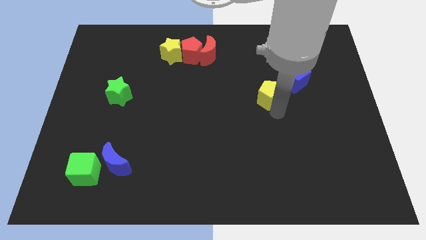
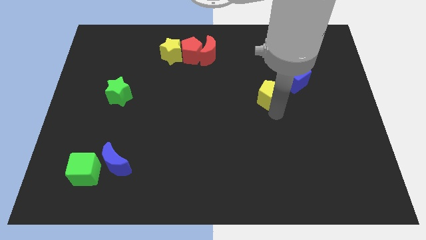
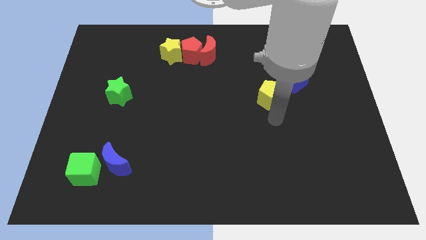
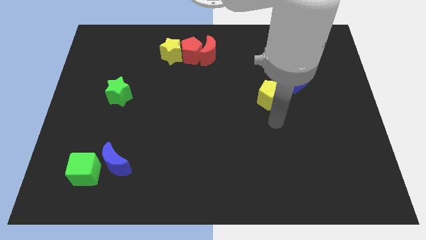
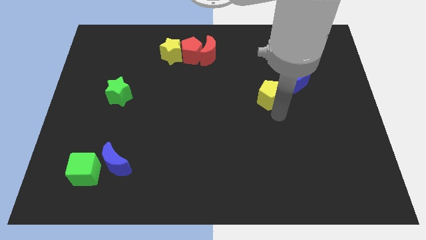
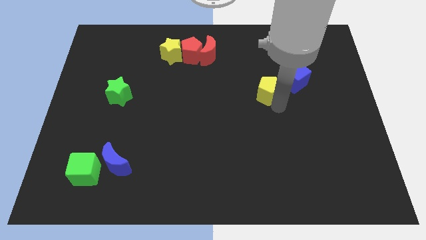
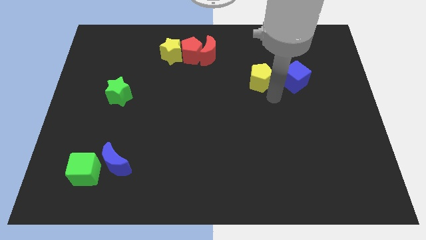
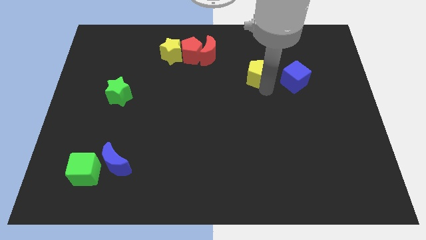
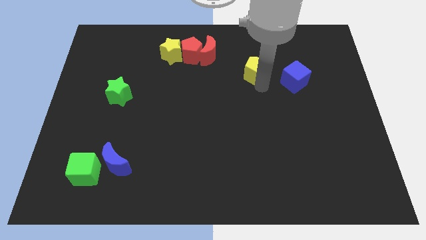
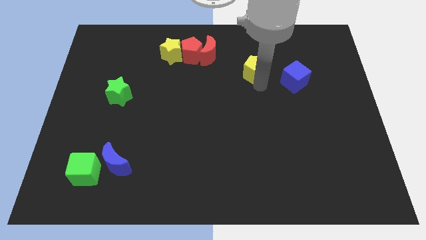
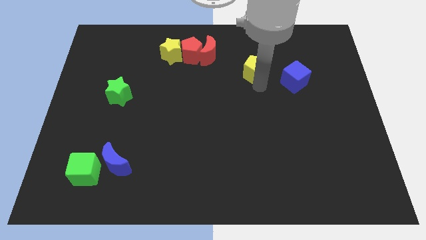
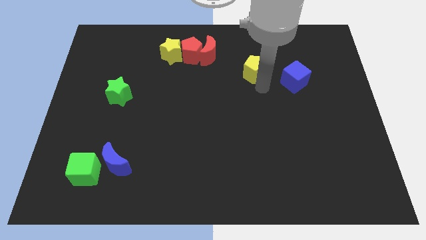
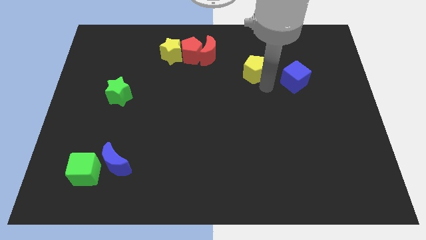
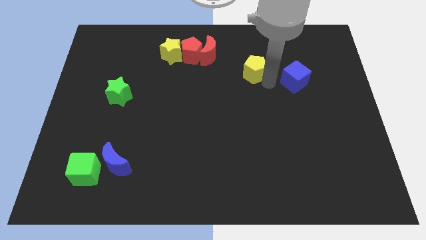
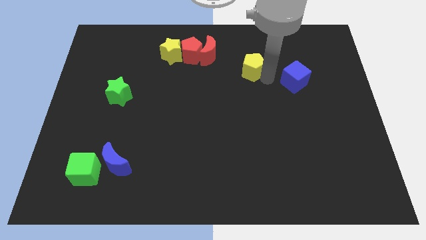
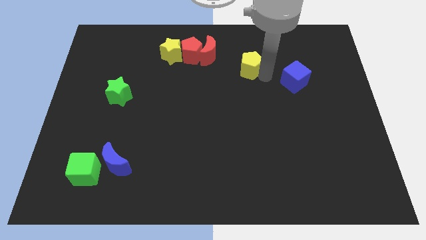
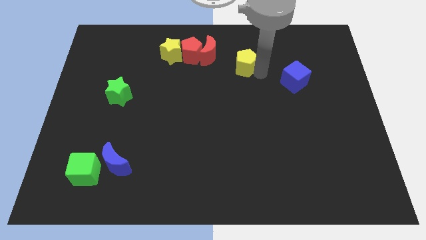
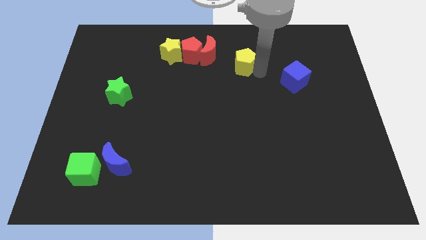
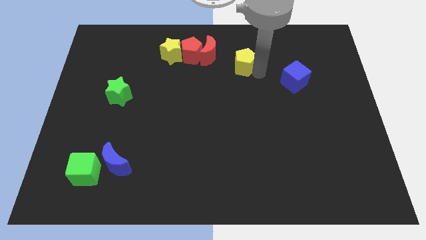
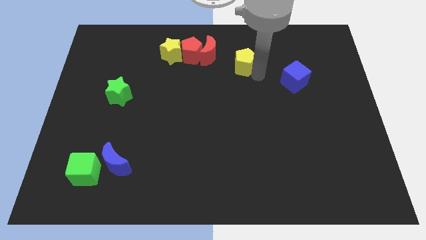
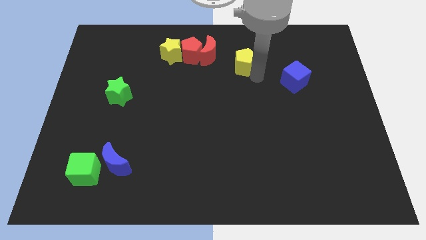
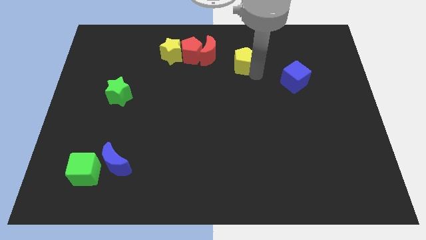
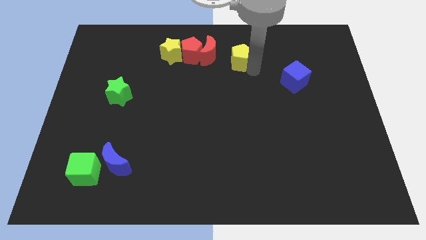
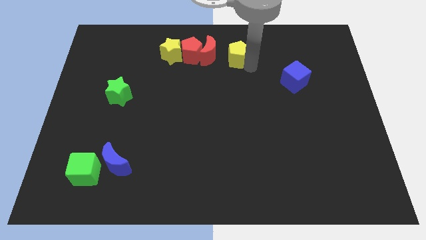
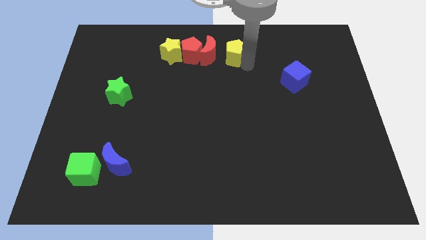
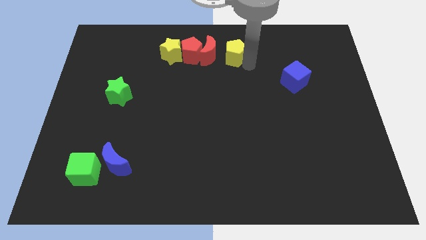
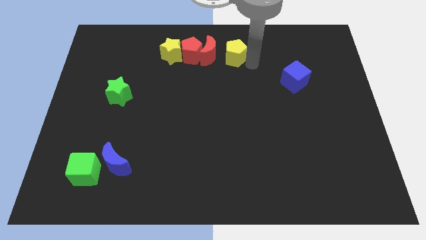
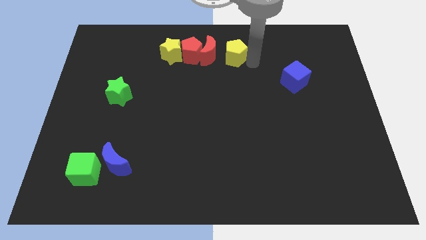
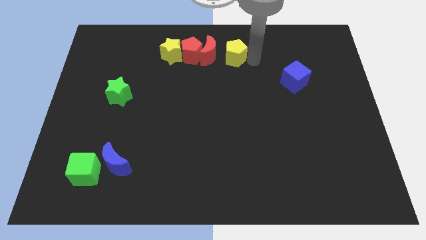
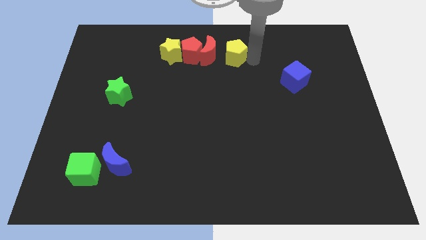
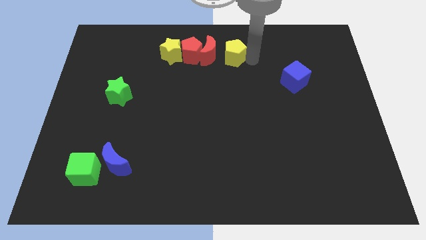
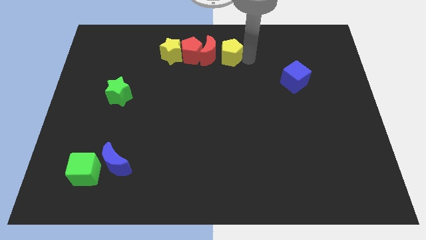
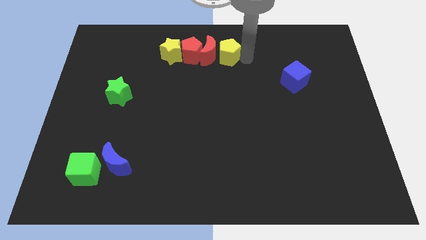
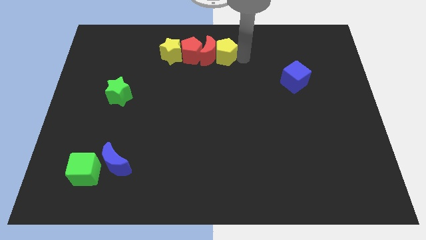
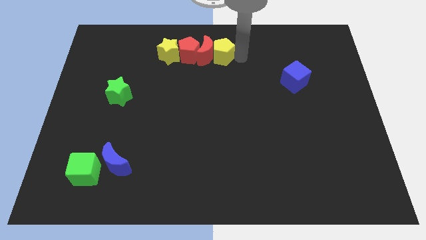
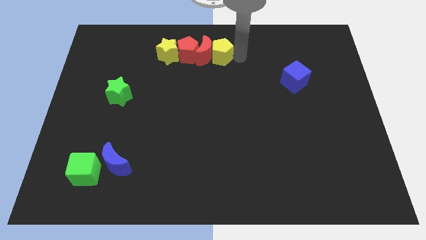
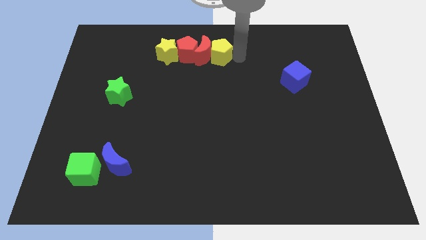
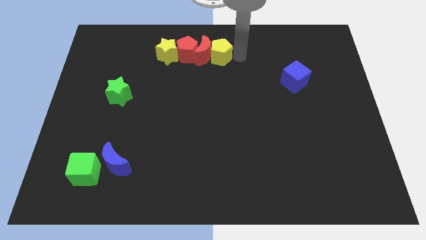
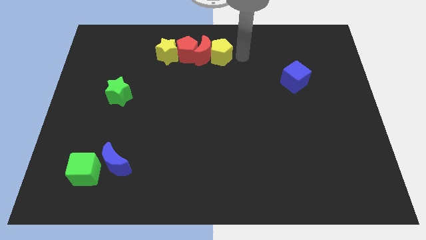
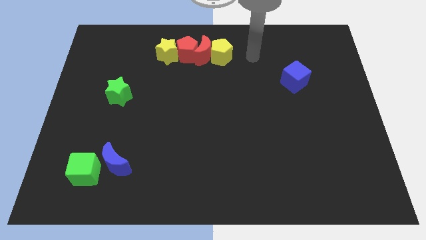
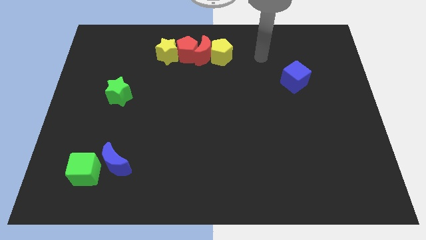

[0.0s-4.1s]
push yellow pentagon into red moon

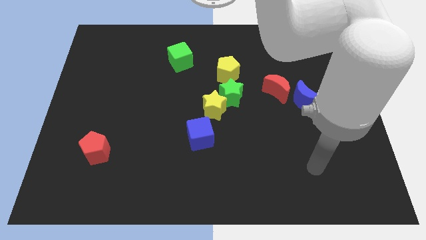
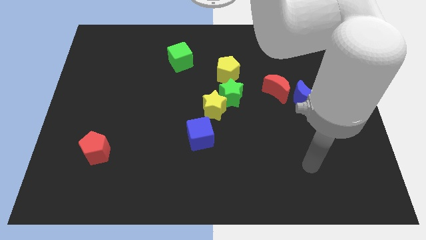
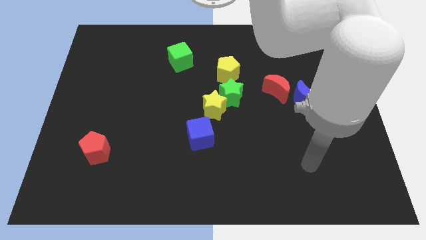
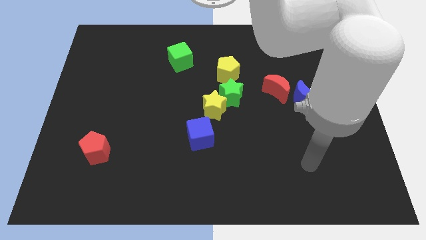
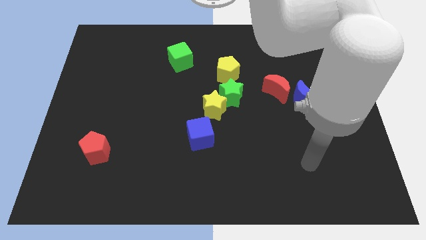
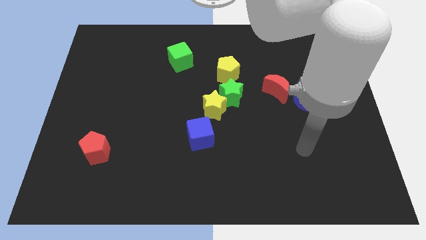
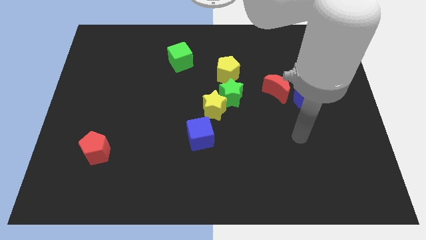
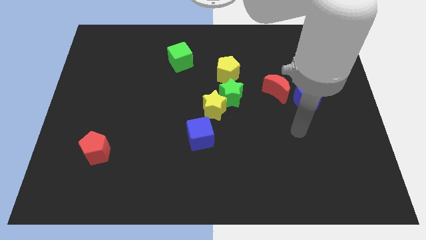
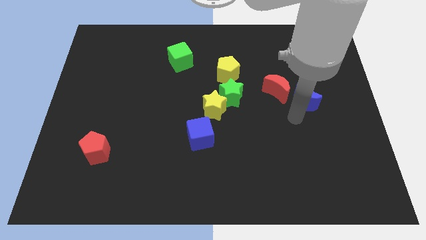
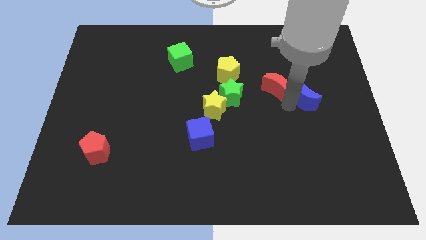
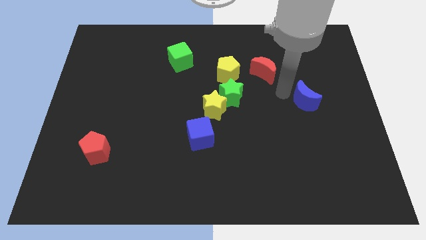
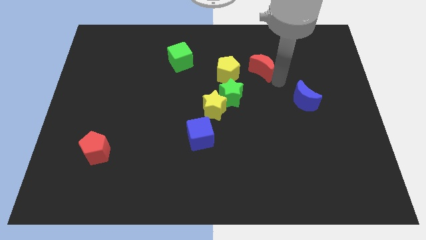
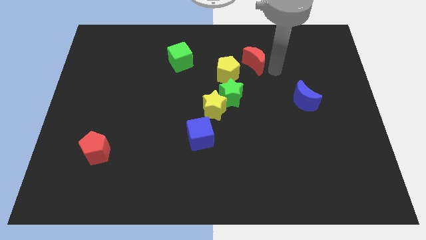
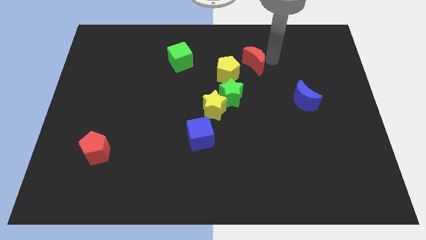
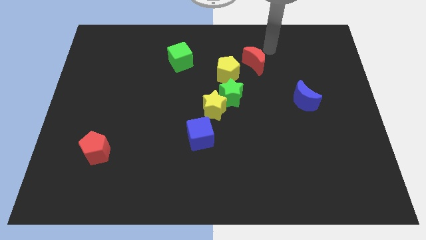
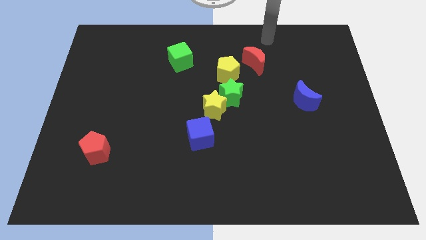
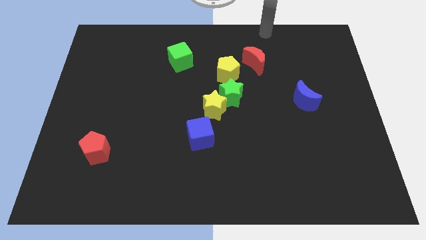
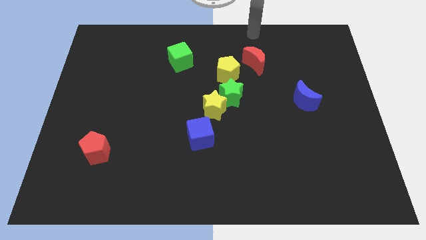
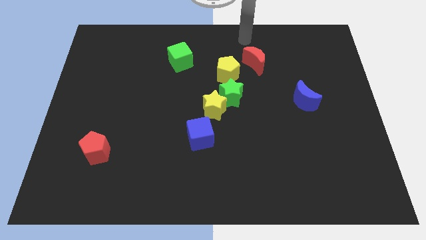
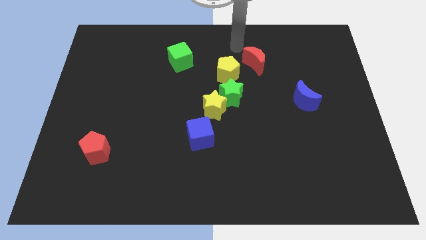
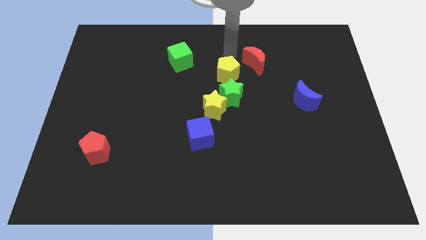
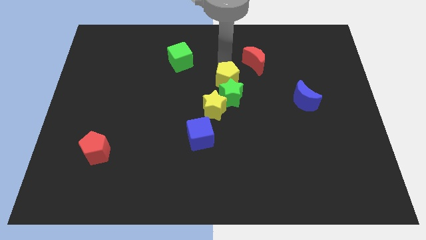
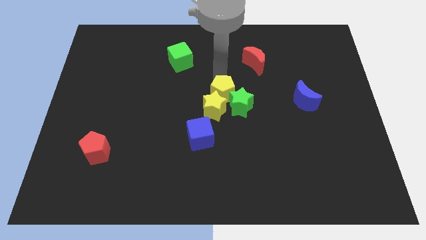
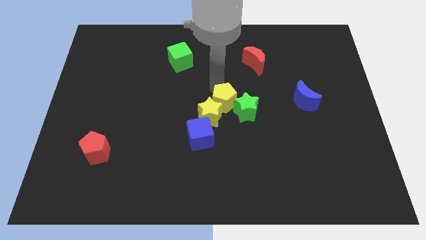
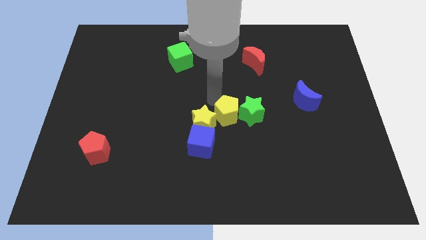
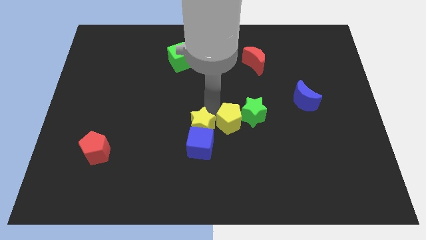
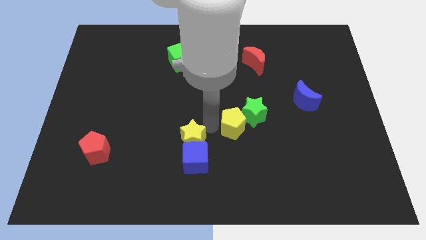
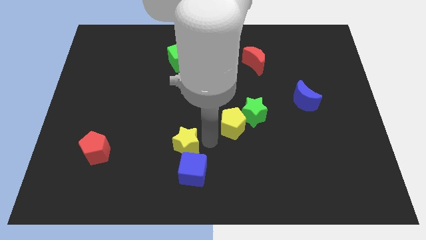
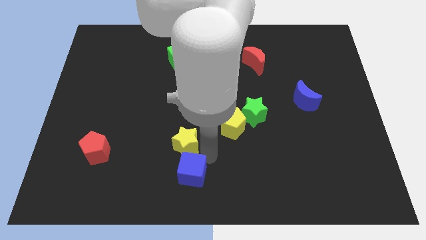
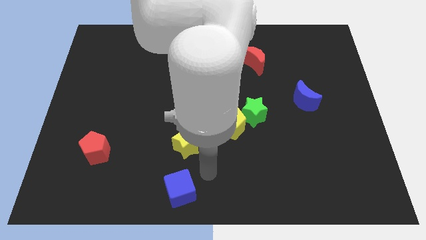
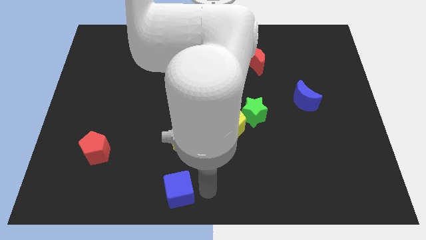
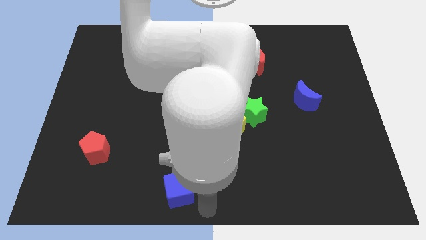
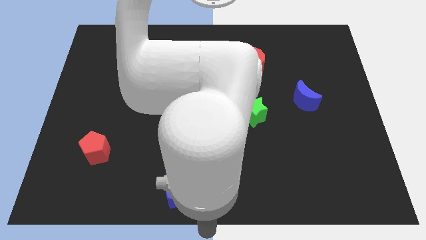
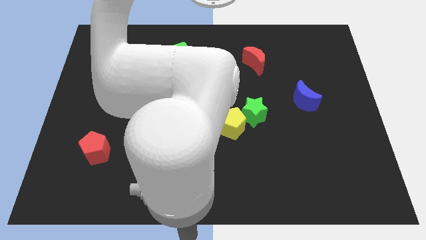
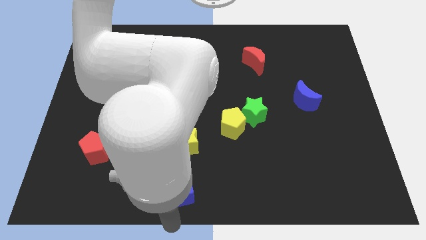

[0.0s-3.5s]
move your arm close to the blue cube

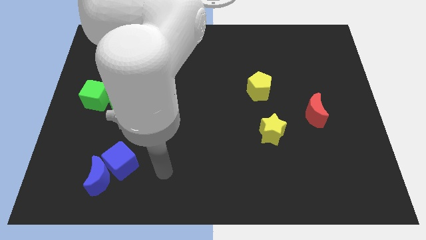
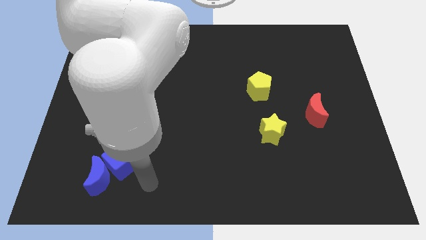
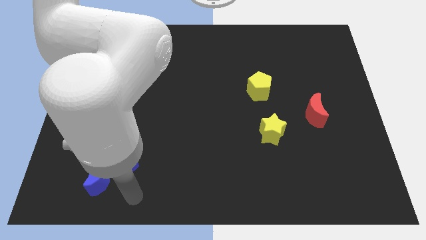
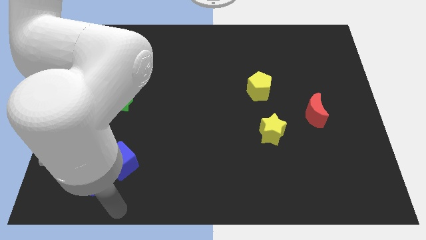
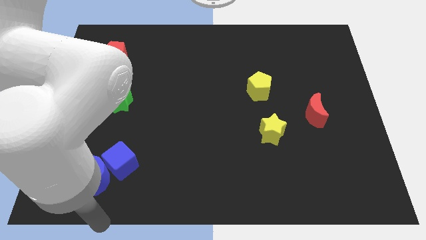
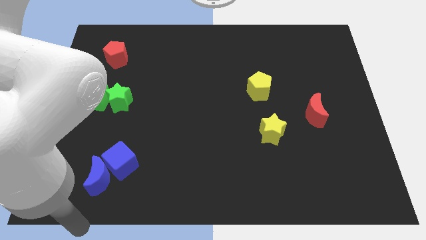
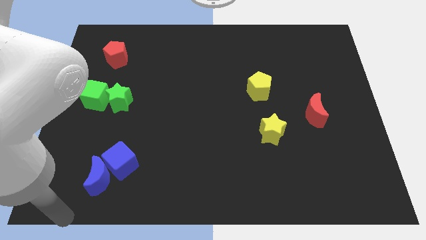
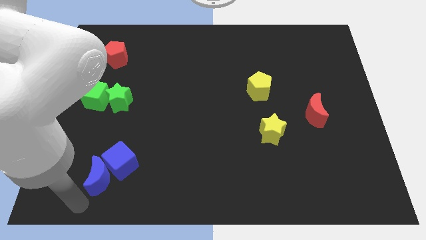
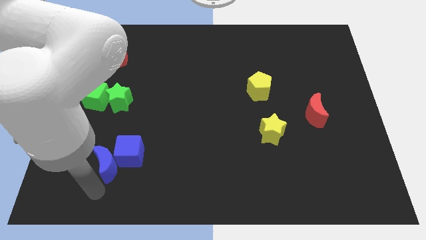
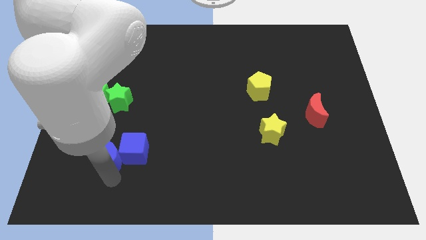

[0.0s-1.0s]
push the blue blocks slightly up

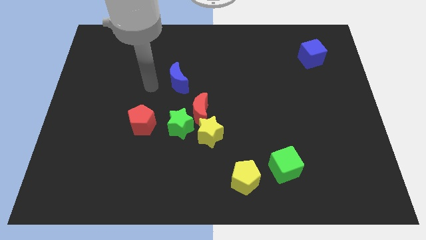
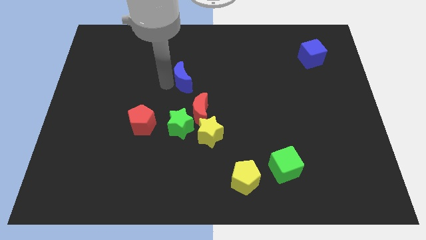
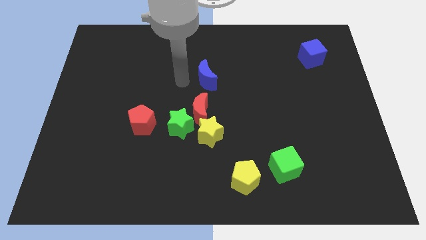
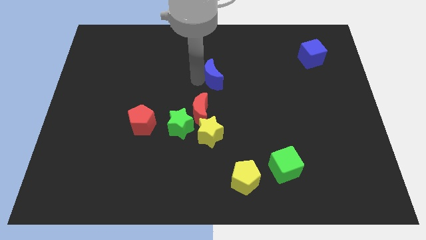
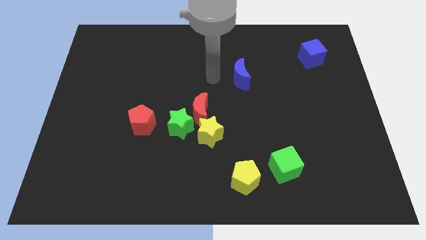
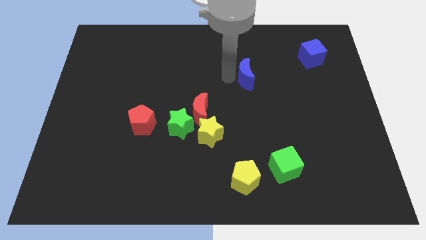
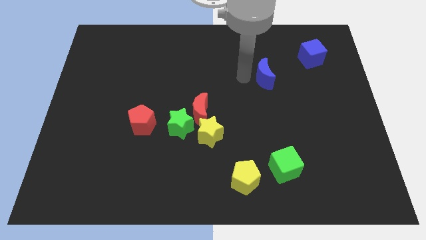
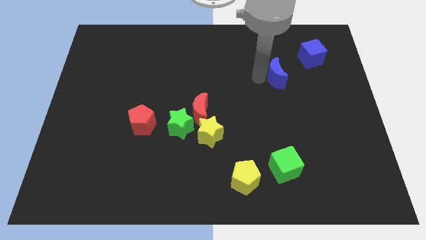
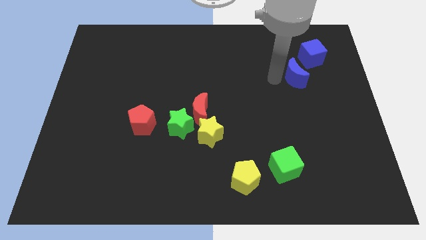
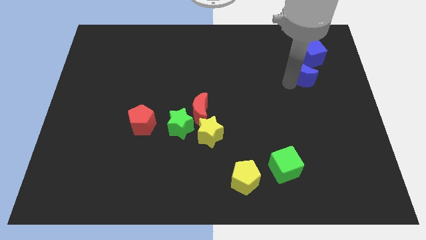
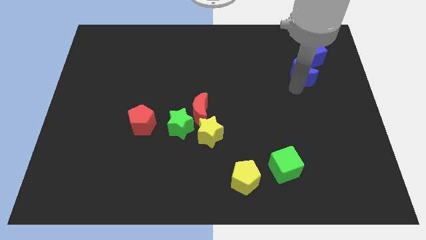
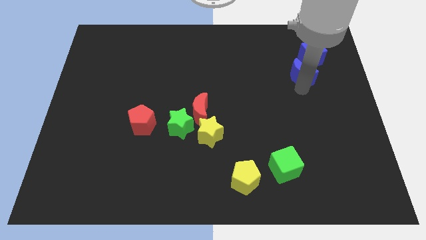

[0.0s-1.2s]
place blue crescent at the bottom of blue cube
